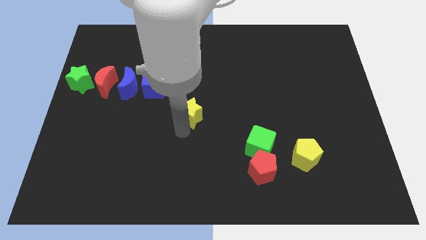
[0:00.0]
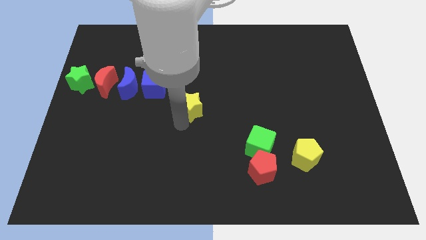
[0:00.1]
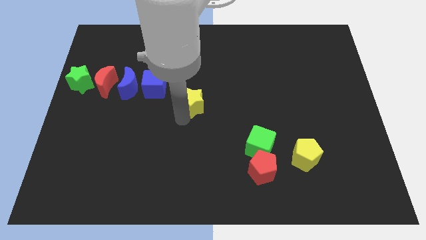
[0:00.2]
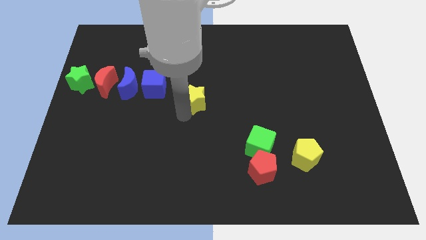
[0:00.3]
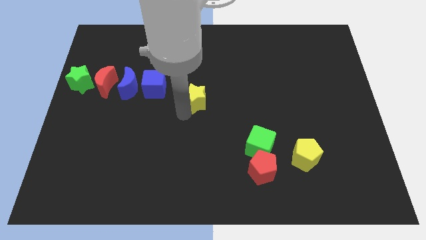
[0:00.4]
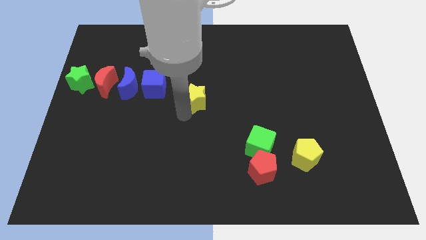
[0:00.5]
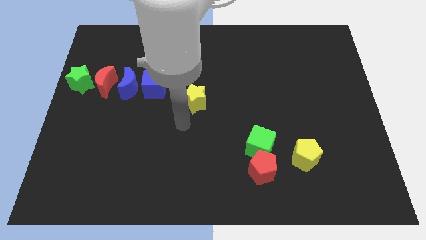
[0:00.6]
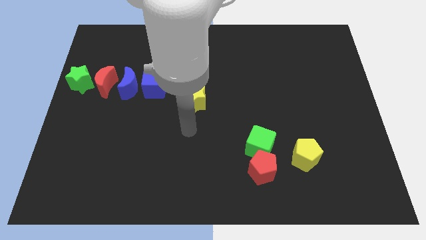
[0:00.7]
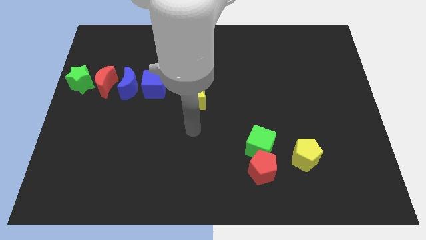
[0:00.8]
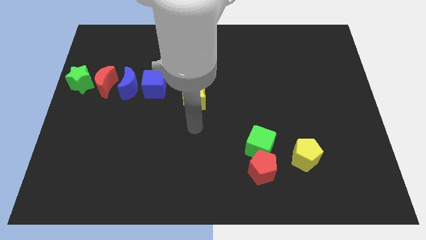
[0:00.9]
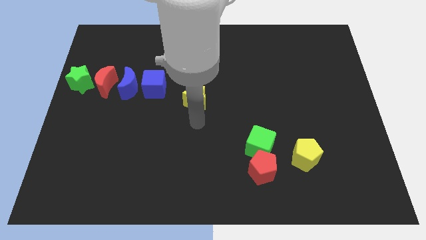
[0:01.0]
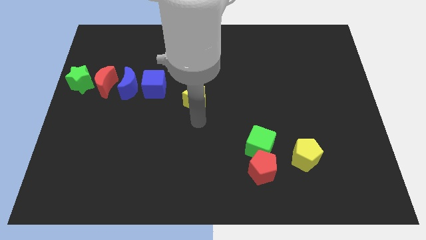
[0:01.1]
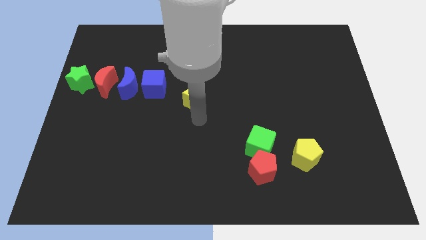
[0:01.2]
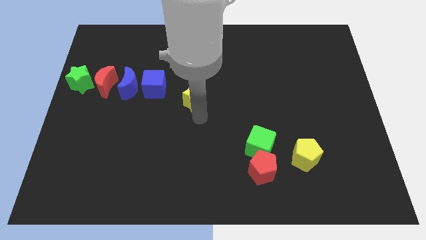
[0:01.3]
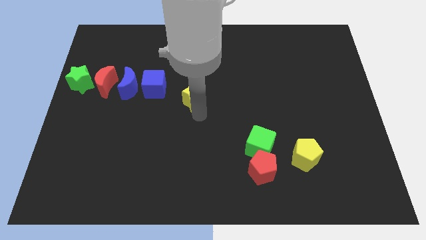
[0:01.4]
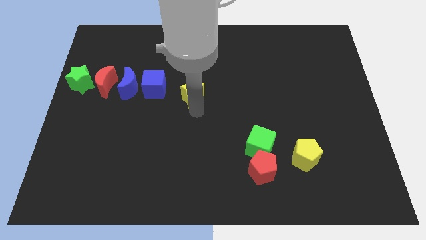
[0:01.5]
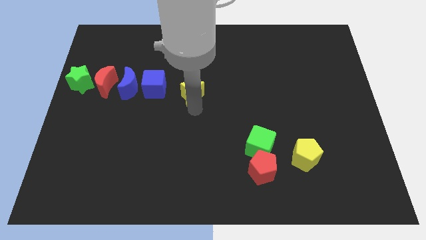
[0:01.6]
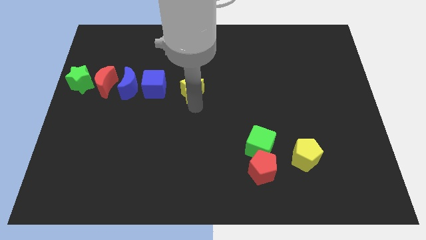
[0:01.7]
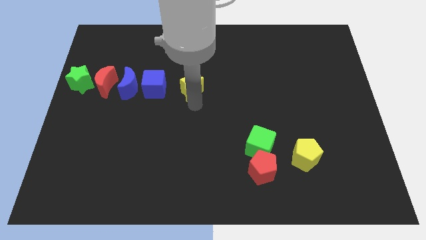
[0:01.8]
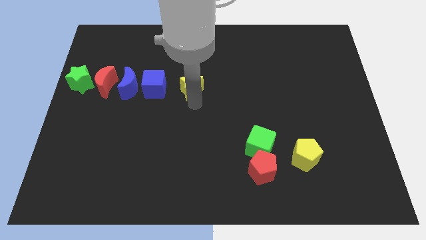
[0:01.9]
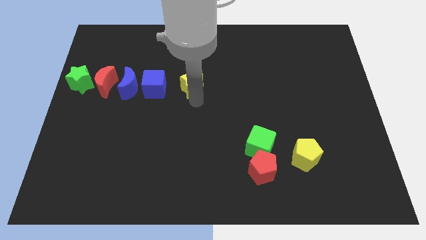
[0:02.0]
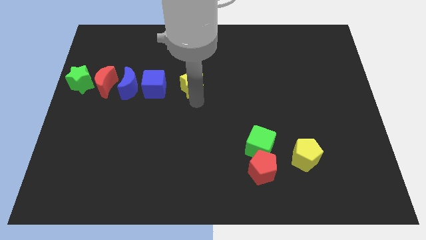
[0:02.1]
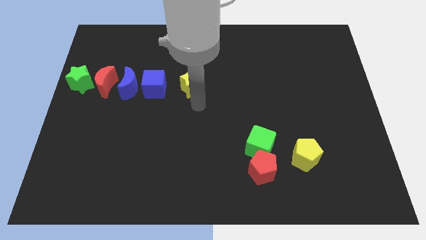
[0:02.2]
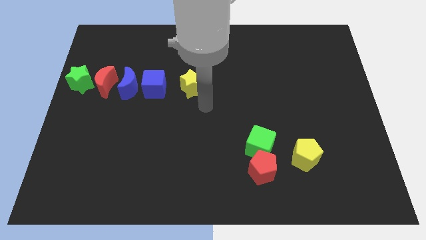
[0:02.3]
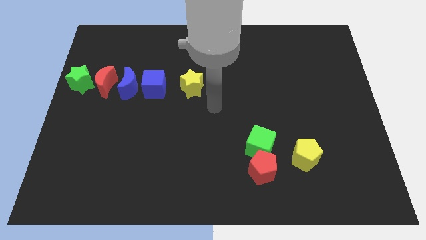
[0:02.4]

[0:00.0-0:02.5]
push the yellow star to the right side of the blue moon

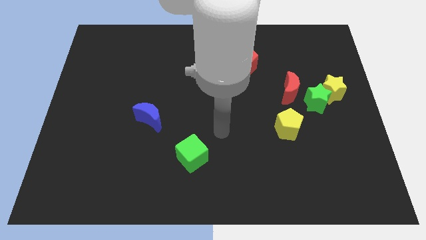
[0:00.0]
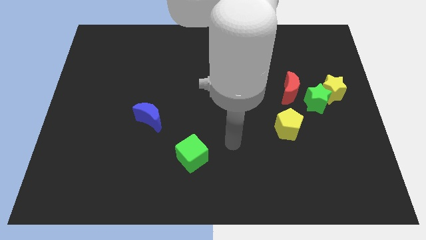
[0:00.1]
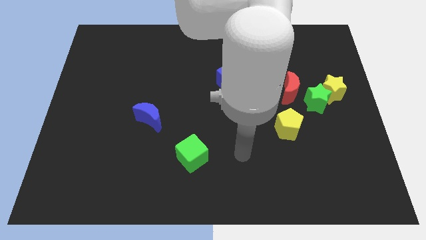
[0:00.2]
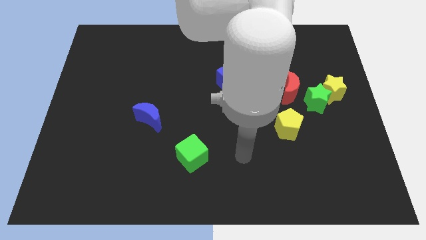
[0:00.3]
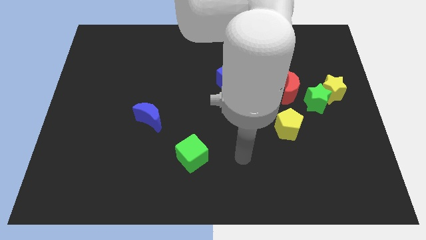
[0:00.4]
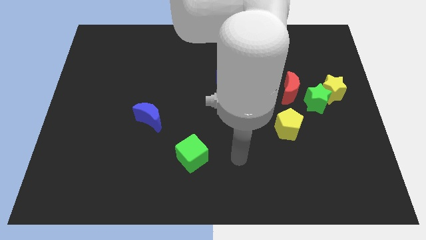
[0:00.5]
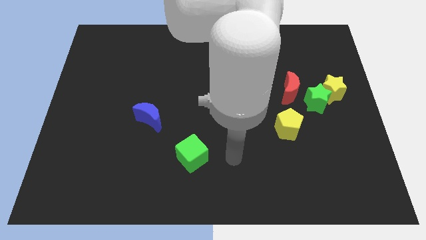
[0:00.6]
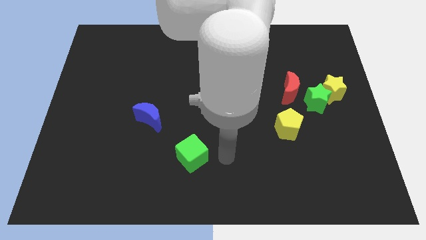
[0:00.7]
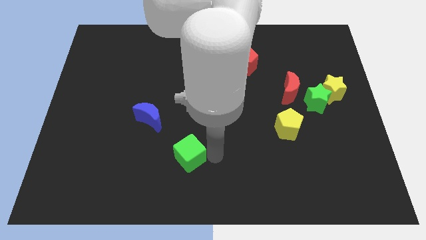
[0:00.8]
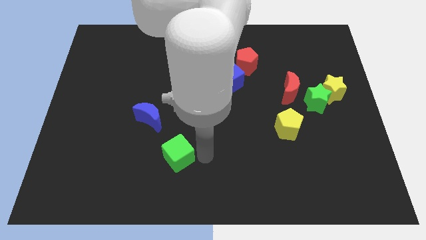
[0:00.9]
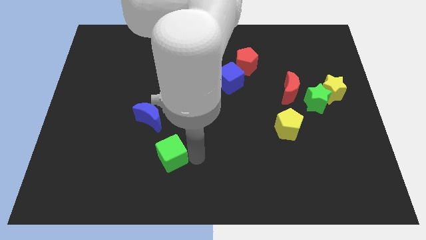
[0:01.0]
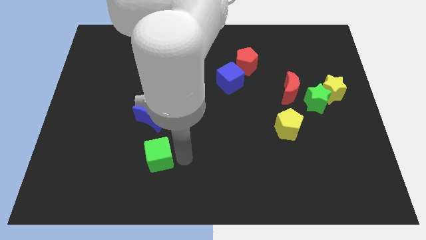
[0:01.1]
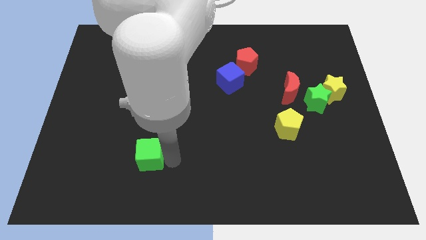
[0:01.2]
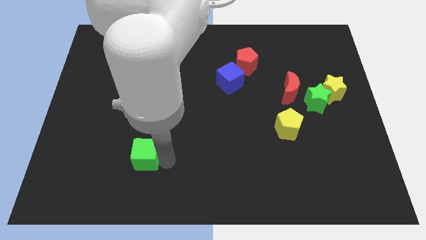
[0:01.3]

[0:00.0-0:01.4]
move the green cube to the left

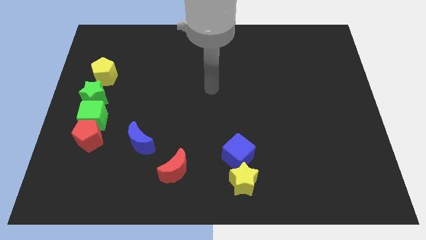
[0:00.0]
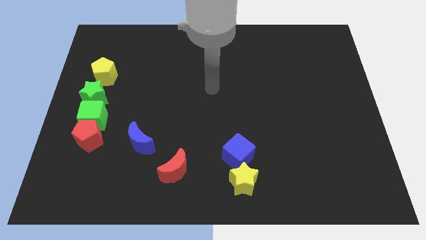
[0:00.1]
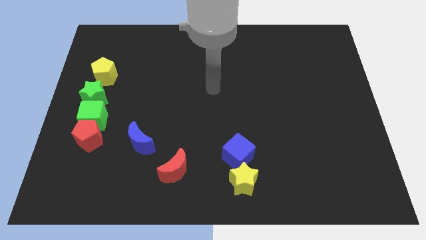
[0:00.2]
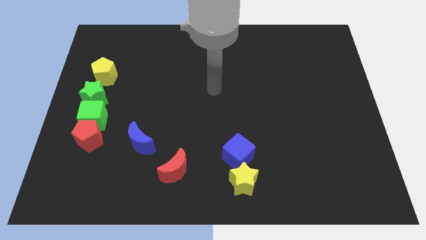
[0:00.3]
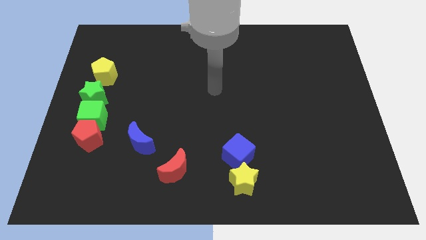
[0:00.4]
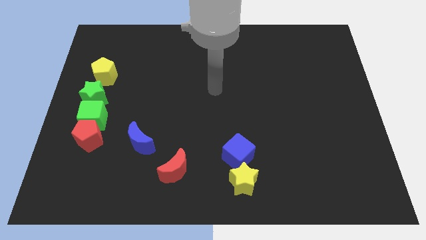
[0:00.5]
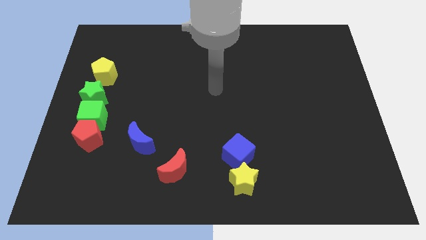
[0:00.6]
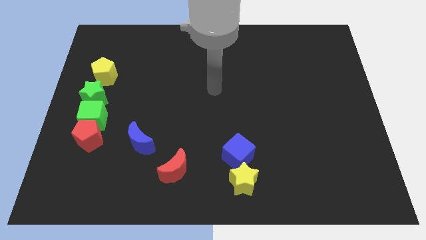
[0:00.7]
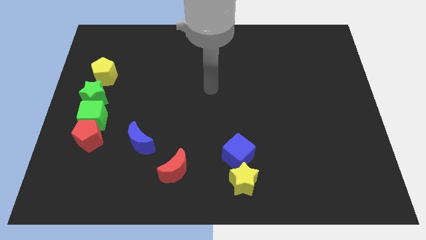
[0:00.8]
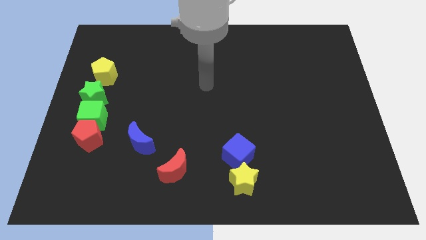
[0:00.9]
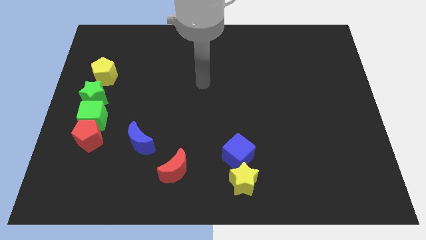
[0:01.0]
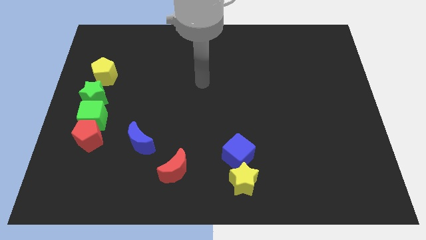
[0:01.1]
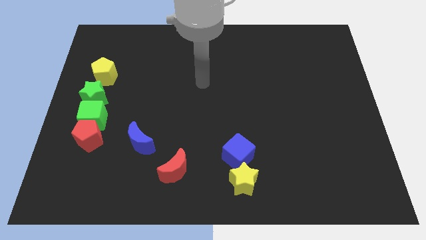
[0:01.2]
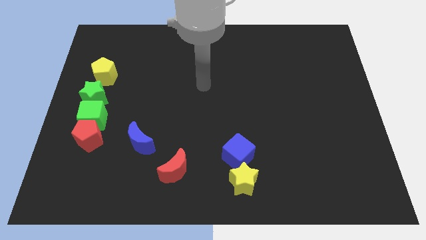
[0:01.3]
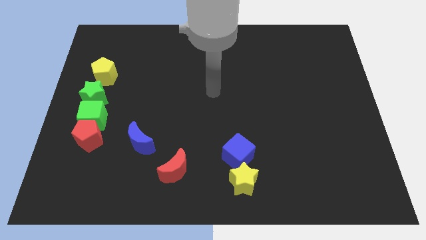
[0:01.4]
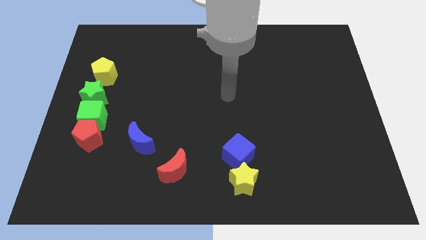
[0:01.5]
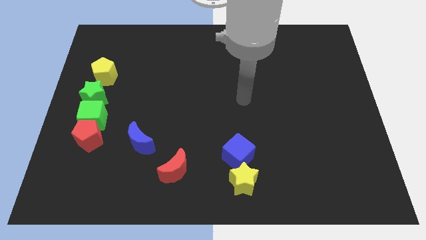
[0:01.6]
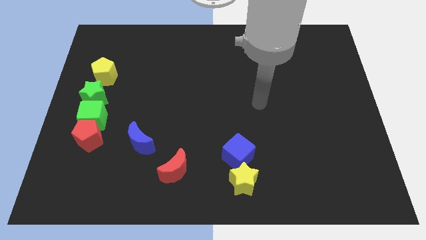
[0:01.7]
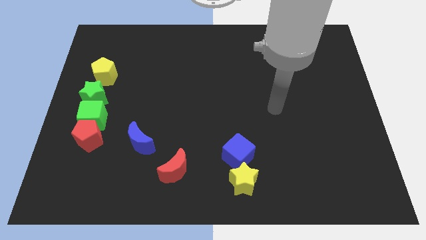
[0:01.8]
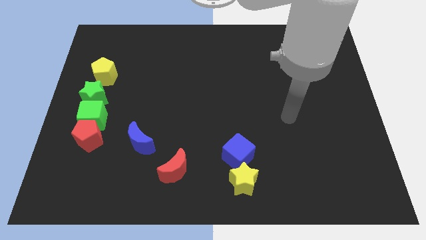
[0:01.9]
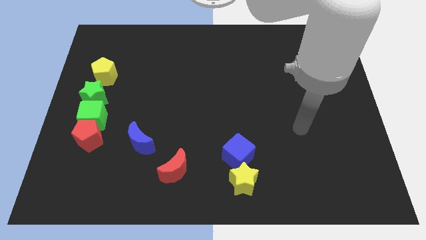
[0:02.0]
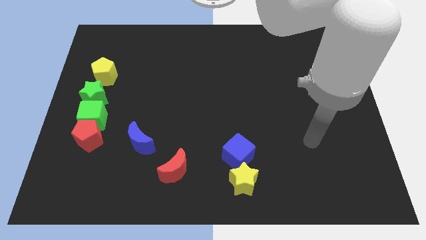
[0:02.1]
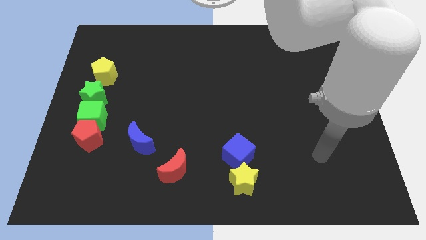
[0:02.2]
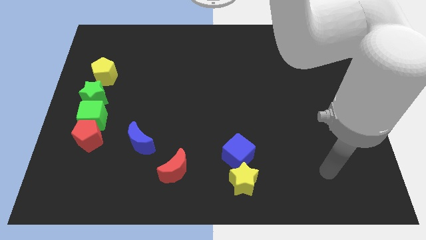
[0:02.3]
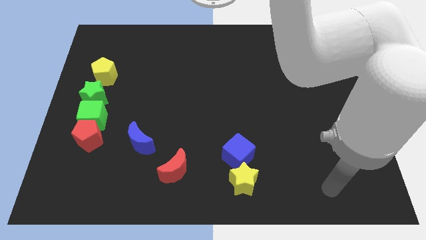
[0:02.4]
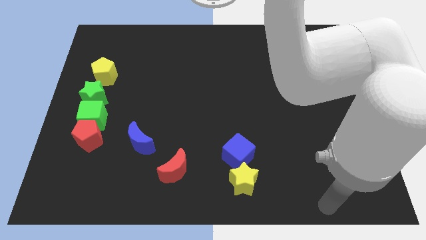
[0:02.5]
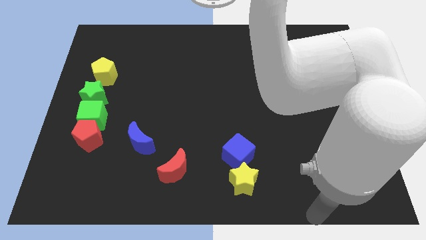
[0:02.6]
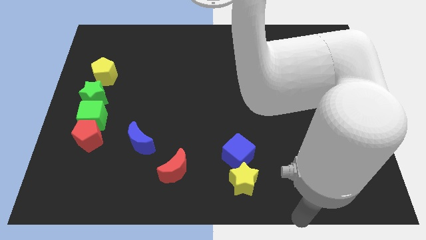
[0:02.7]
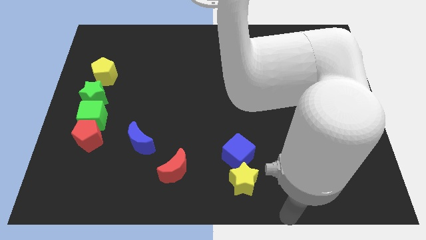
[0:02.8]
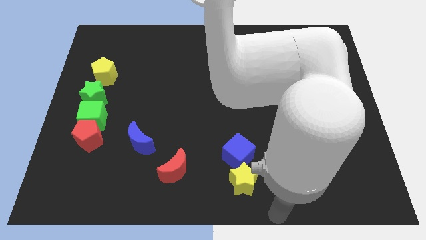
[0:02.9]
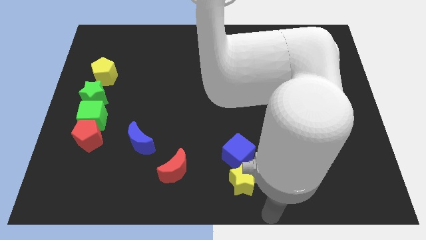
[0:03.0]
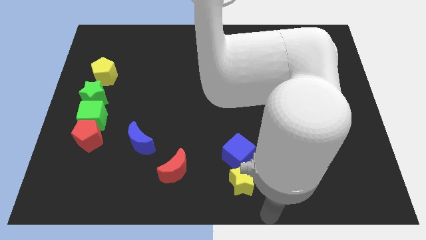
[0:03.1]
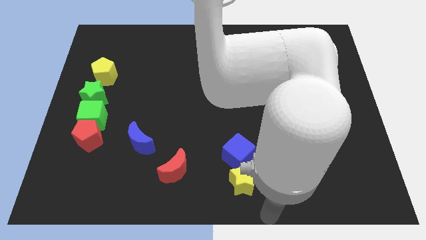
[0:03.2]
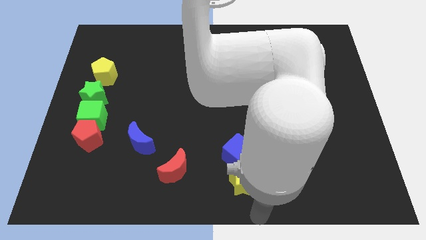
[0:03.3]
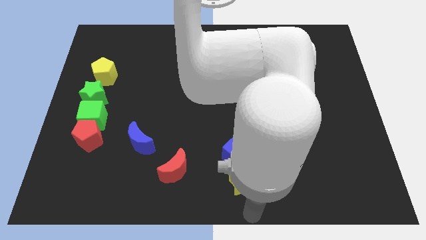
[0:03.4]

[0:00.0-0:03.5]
place the pointer at the bottom of the yellow star

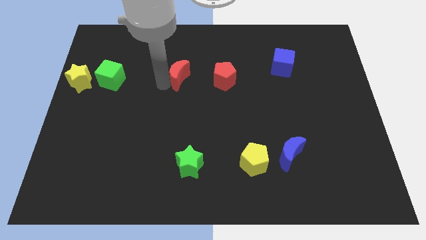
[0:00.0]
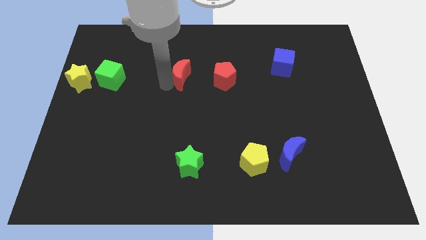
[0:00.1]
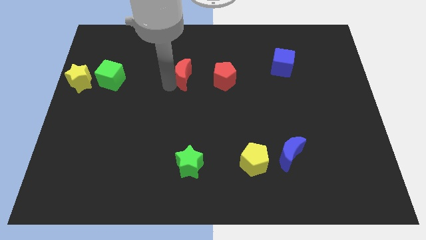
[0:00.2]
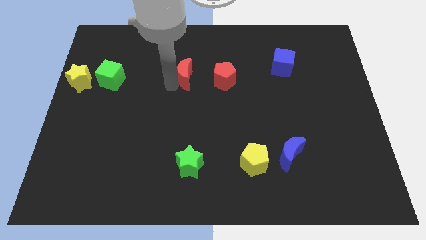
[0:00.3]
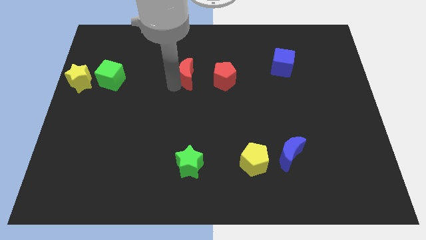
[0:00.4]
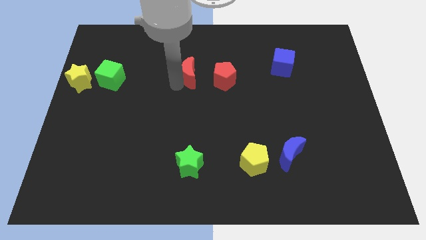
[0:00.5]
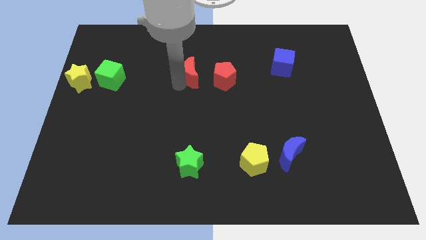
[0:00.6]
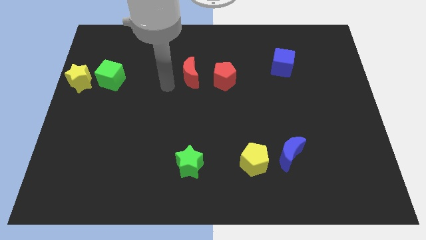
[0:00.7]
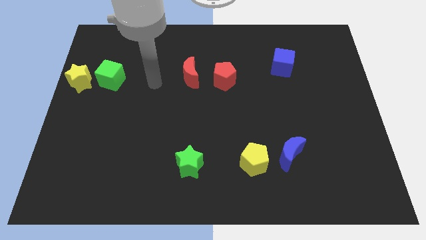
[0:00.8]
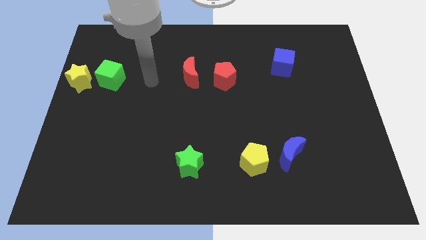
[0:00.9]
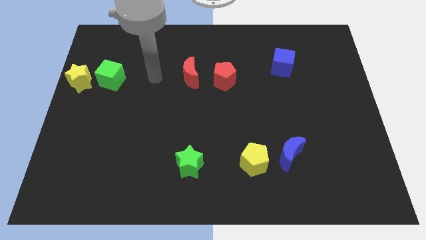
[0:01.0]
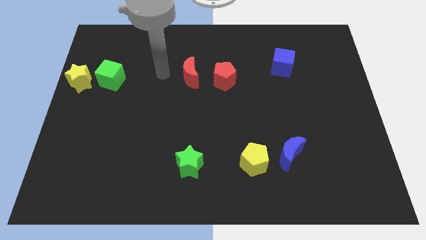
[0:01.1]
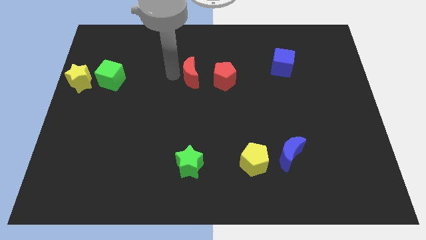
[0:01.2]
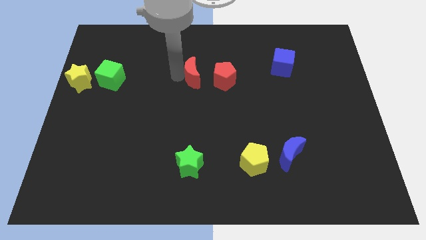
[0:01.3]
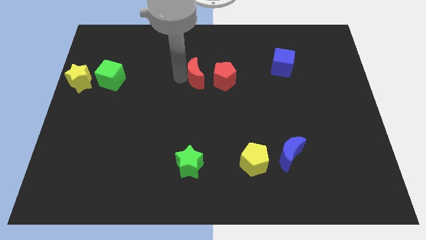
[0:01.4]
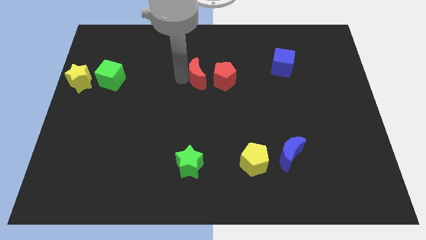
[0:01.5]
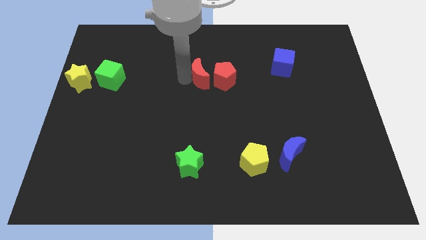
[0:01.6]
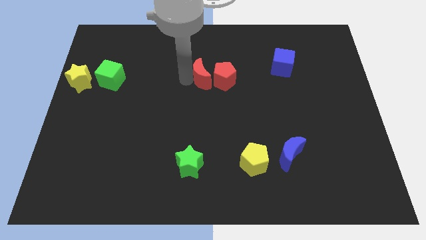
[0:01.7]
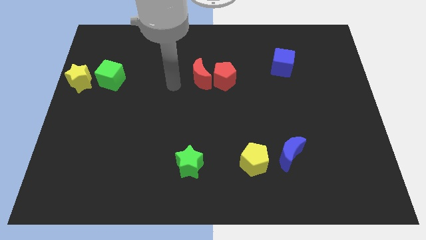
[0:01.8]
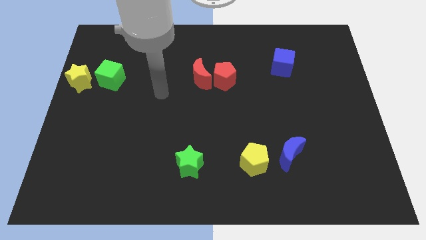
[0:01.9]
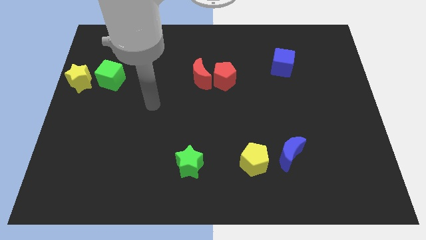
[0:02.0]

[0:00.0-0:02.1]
move the red moon close to the red pentagon
